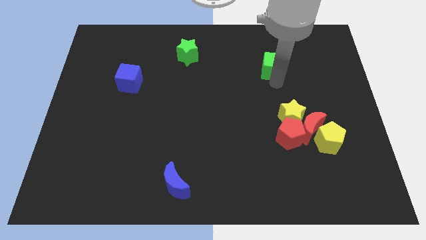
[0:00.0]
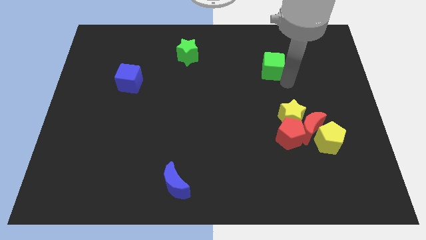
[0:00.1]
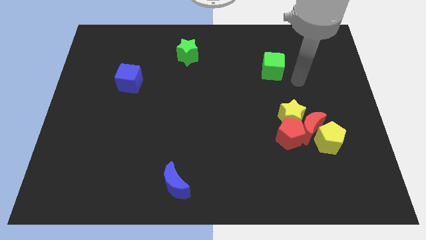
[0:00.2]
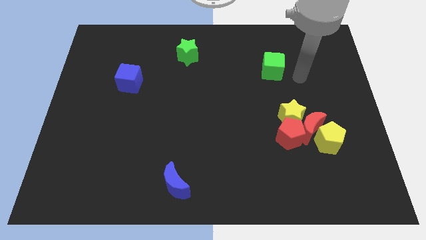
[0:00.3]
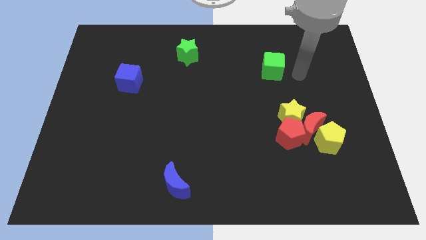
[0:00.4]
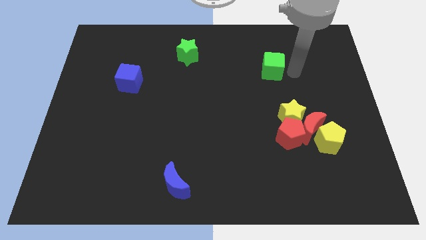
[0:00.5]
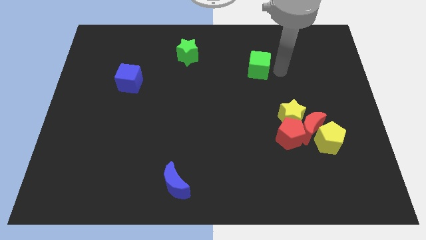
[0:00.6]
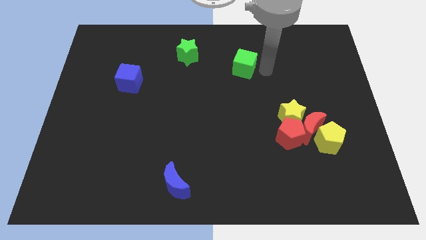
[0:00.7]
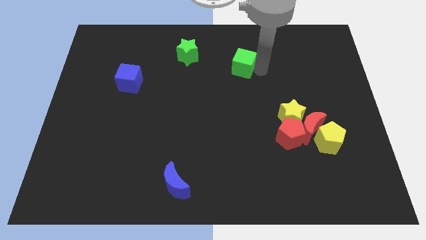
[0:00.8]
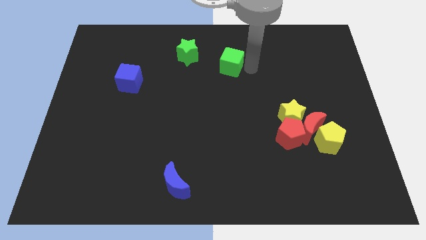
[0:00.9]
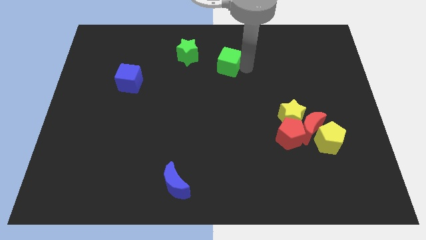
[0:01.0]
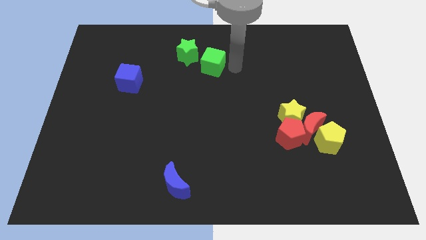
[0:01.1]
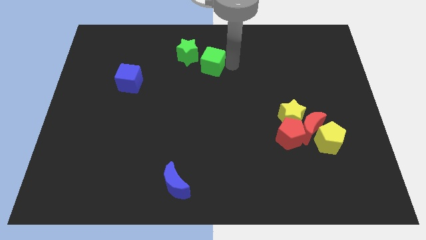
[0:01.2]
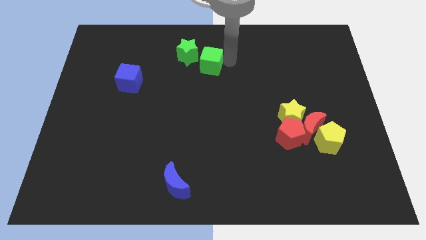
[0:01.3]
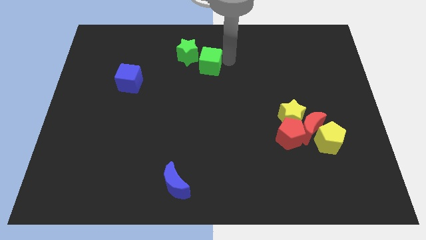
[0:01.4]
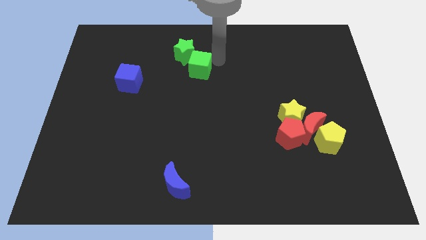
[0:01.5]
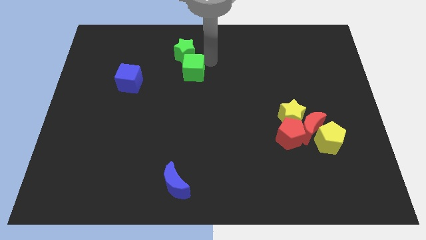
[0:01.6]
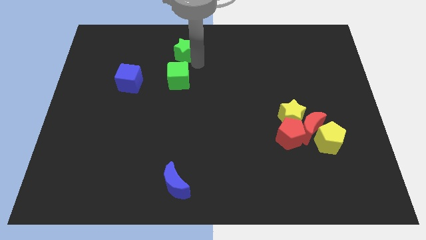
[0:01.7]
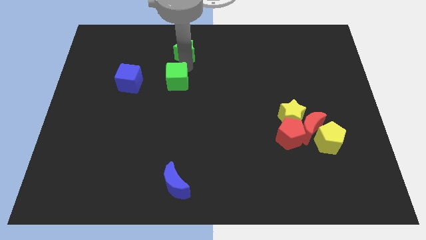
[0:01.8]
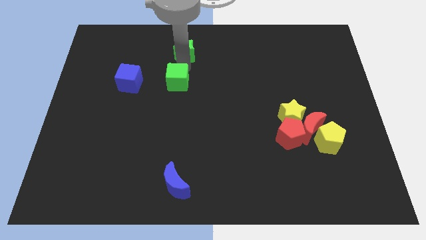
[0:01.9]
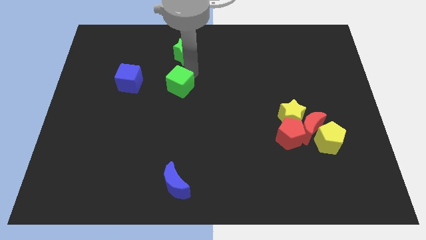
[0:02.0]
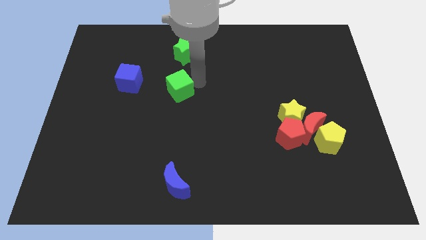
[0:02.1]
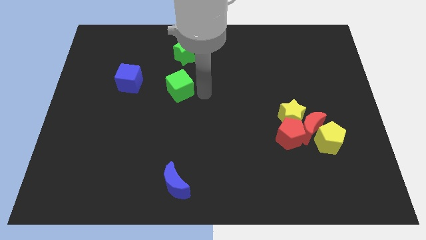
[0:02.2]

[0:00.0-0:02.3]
place the green cube at the bottom of green star

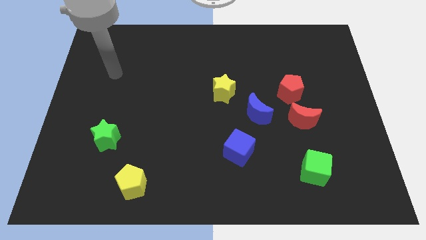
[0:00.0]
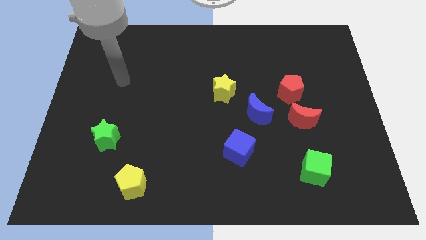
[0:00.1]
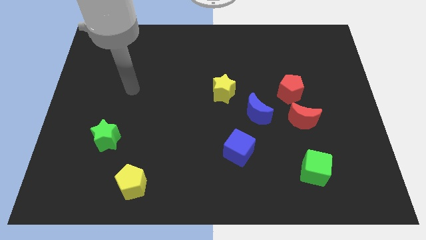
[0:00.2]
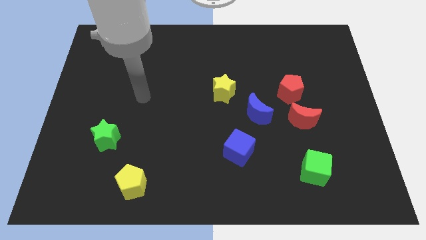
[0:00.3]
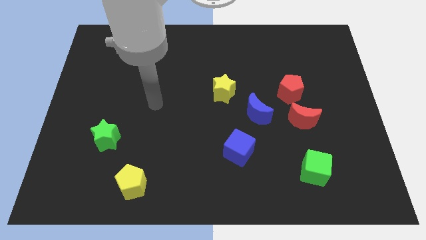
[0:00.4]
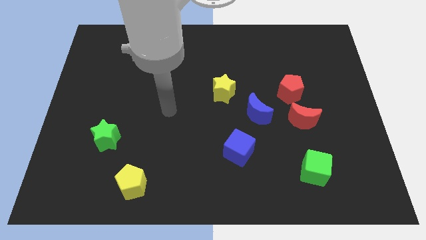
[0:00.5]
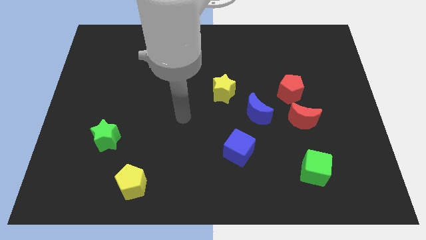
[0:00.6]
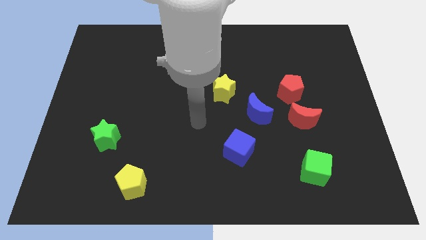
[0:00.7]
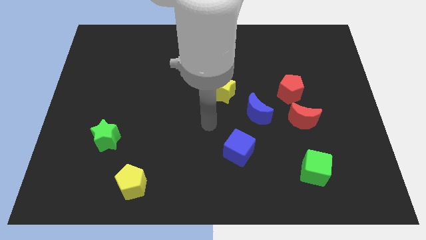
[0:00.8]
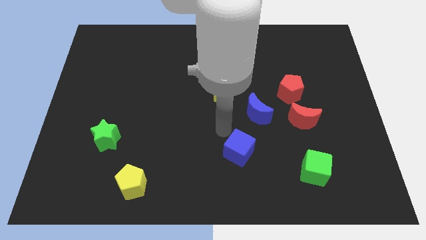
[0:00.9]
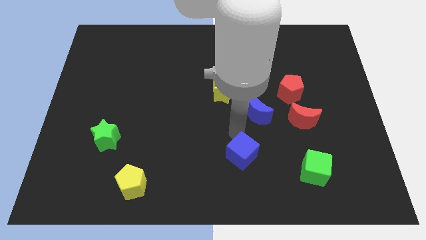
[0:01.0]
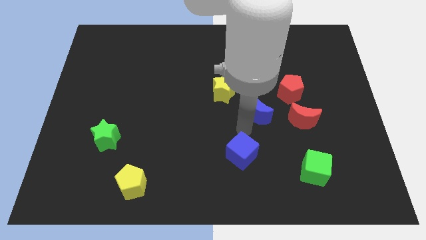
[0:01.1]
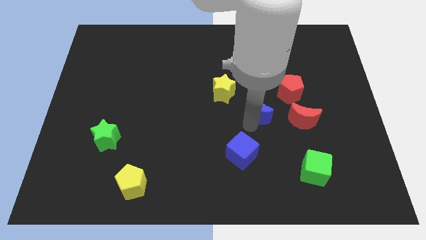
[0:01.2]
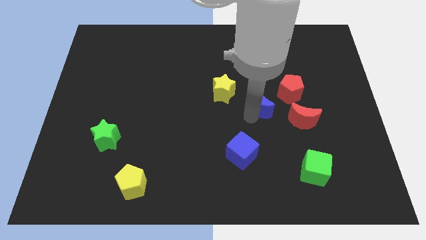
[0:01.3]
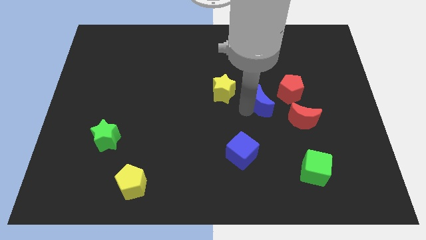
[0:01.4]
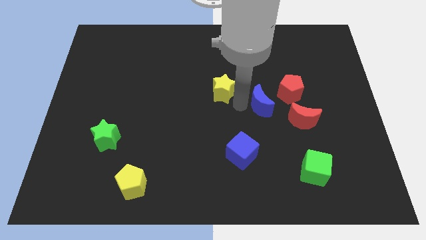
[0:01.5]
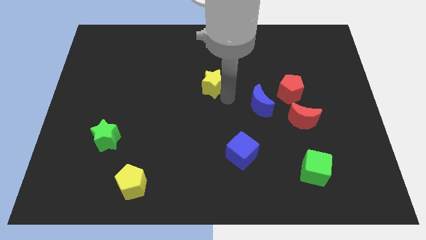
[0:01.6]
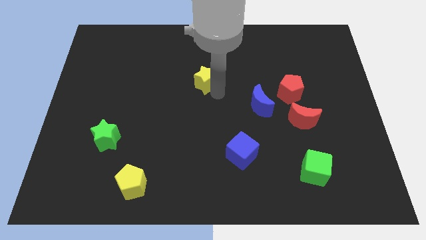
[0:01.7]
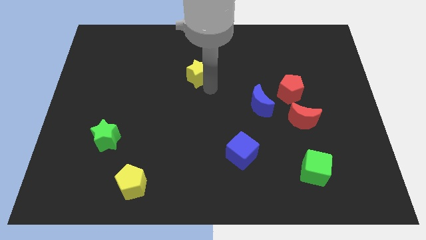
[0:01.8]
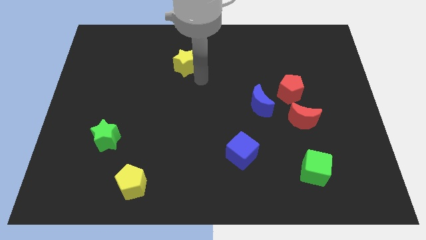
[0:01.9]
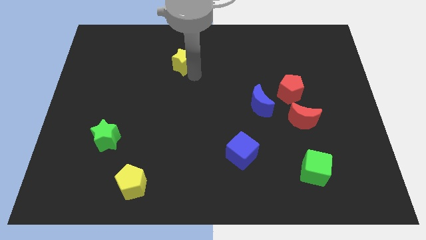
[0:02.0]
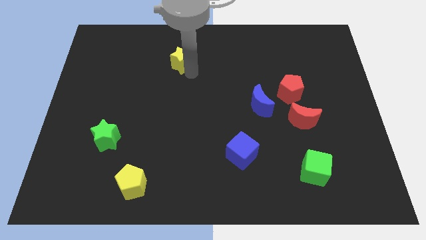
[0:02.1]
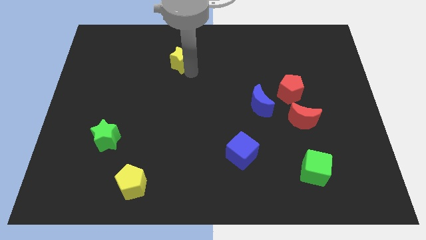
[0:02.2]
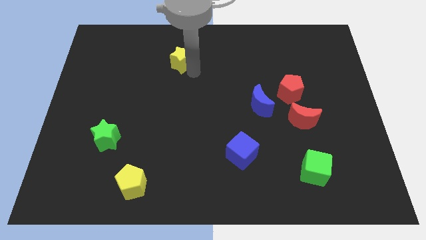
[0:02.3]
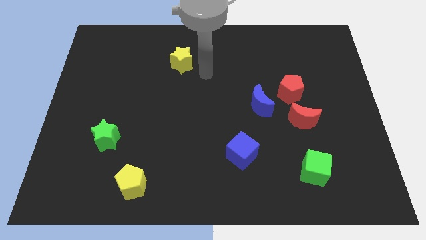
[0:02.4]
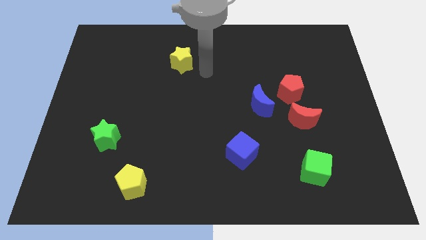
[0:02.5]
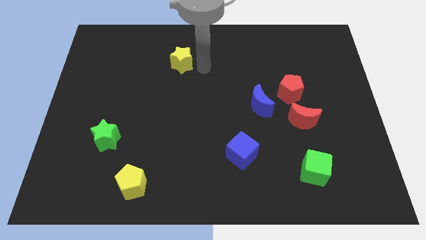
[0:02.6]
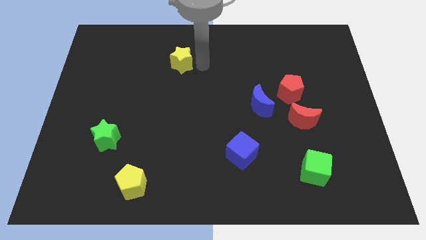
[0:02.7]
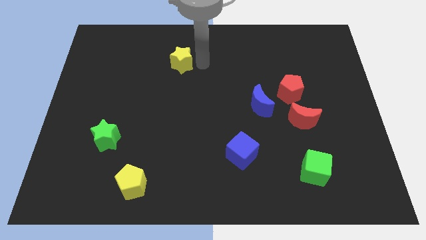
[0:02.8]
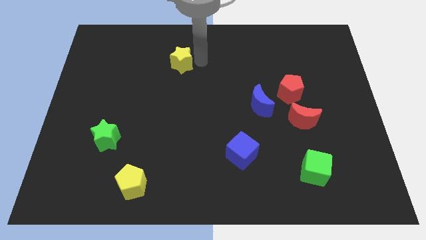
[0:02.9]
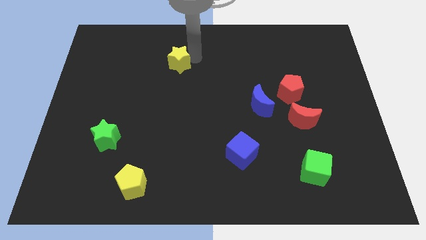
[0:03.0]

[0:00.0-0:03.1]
slide the yellow star diagonally top left to the blue moon

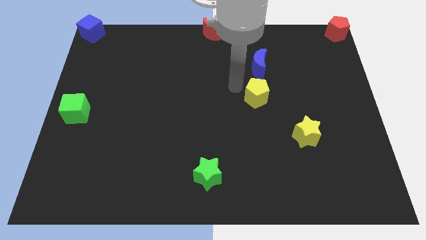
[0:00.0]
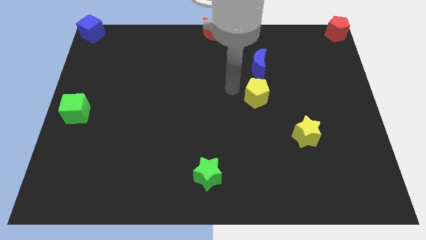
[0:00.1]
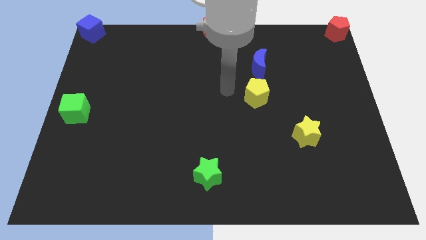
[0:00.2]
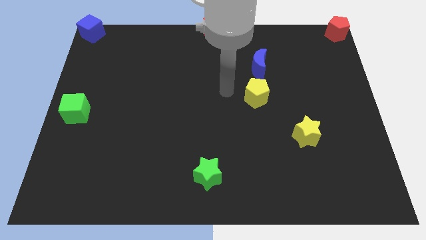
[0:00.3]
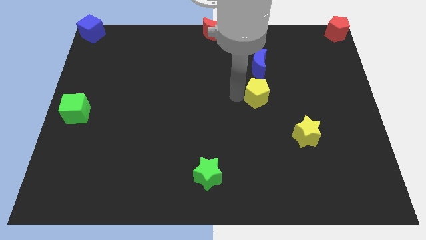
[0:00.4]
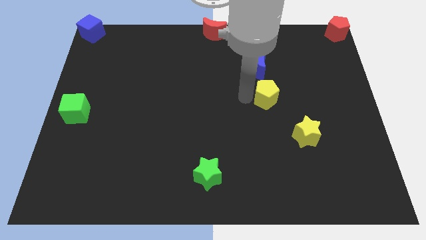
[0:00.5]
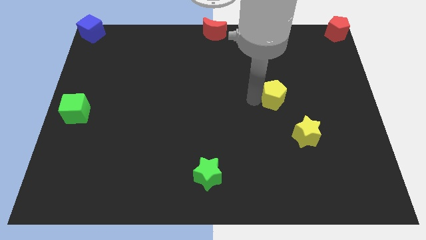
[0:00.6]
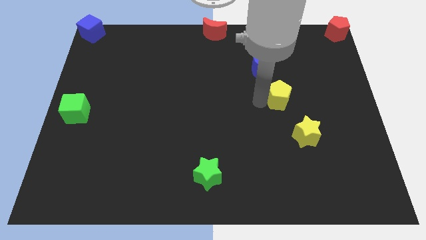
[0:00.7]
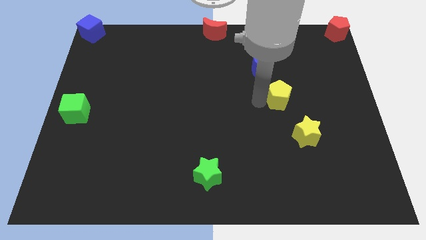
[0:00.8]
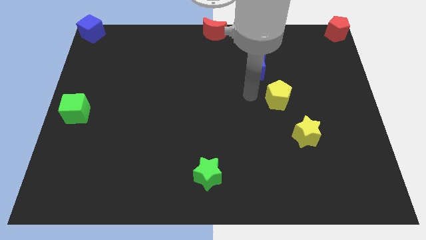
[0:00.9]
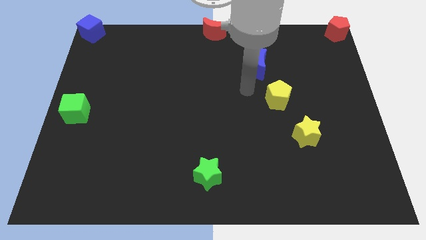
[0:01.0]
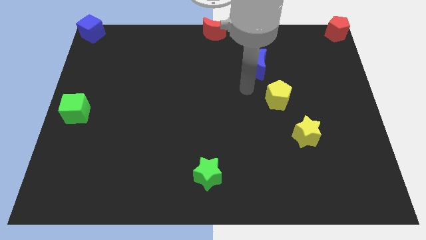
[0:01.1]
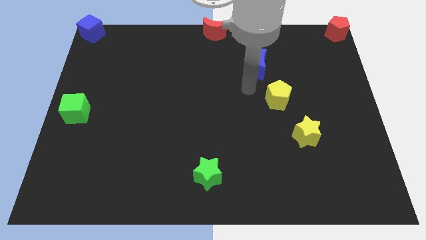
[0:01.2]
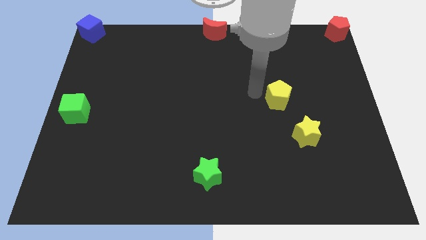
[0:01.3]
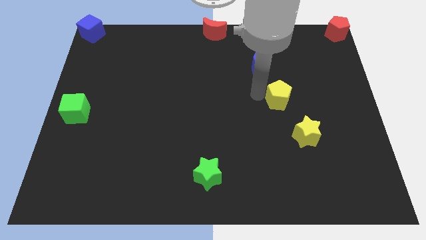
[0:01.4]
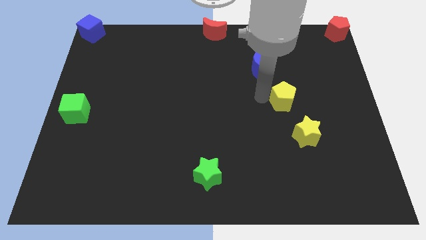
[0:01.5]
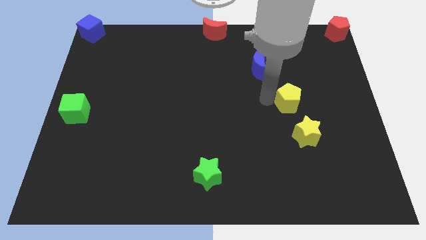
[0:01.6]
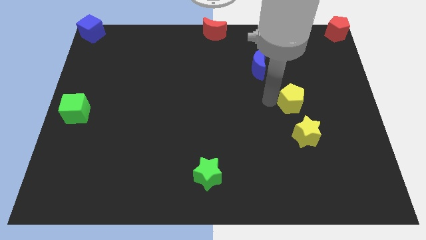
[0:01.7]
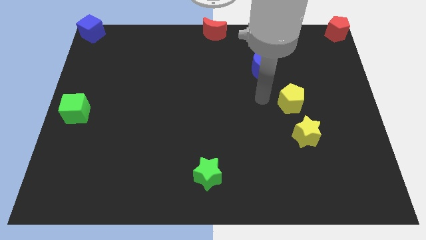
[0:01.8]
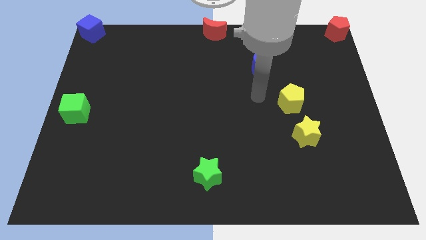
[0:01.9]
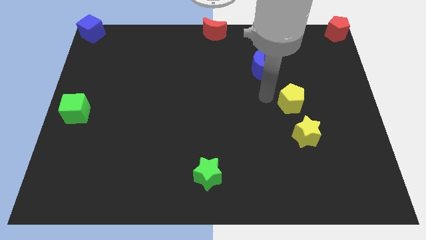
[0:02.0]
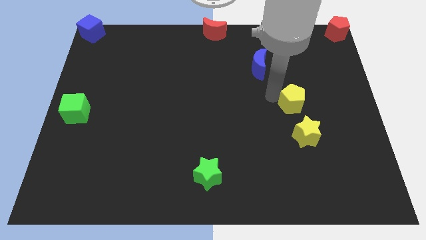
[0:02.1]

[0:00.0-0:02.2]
place the yellow penatgon abov ethe yellow star

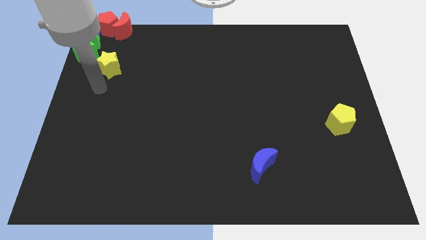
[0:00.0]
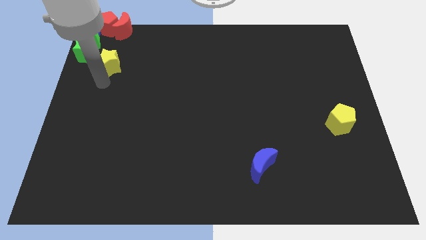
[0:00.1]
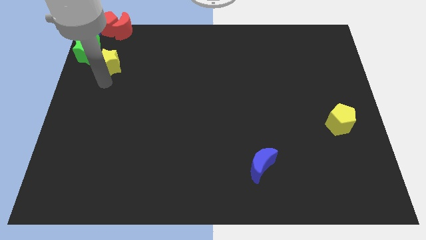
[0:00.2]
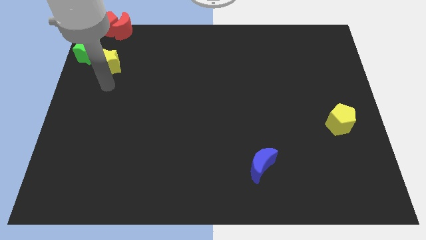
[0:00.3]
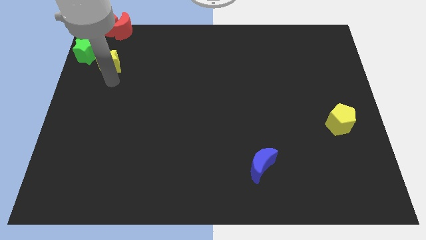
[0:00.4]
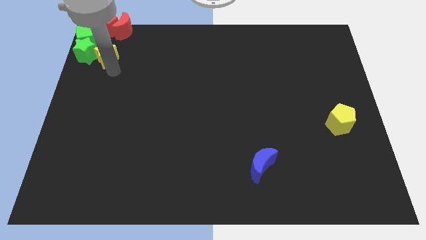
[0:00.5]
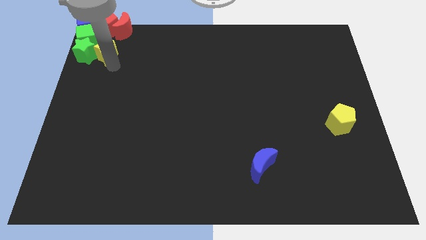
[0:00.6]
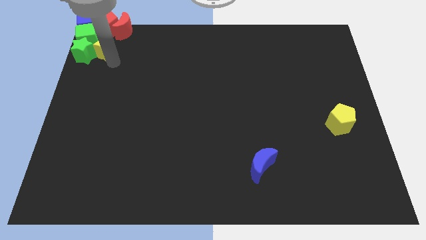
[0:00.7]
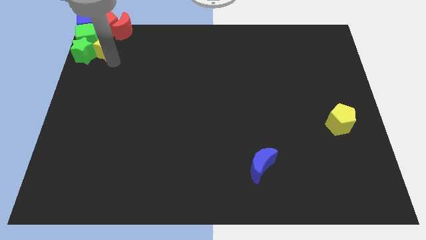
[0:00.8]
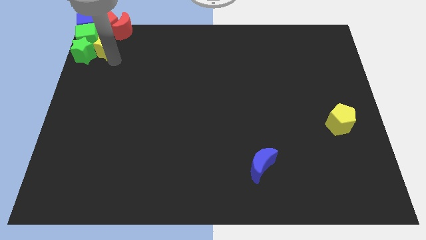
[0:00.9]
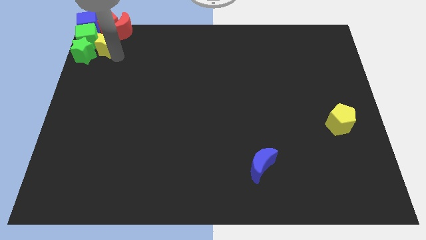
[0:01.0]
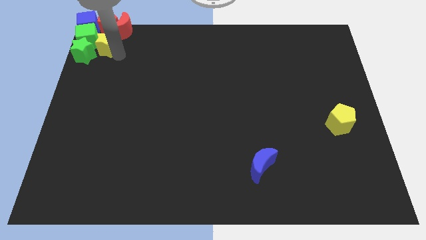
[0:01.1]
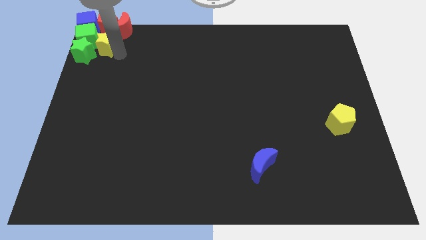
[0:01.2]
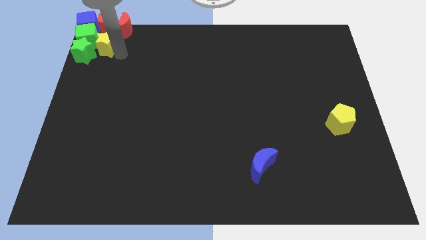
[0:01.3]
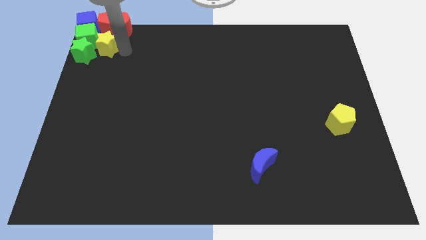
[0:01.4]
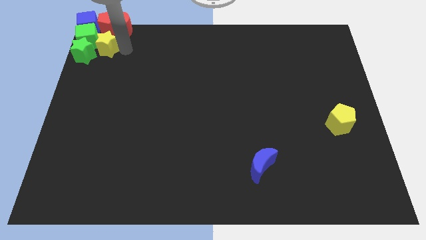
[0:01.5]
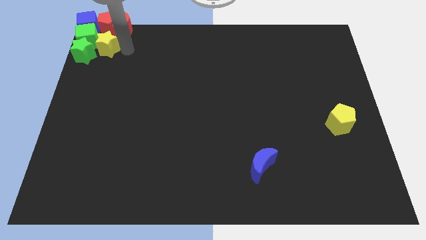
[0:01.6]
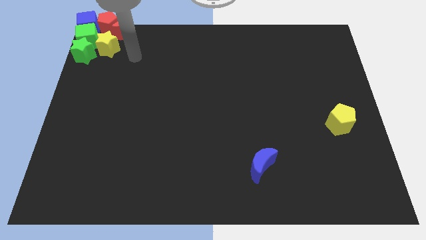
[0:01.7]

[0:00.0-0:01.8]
move the yellow star to the right of the green star and green cube
